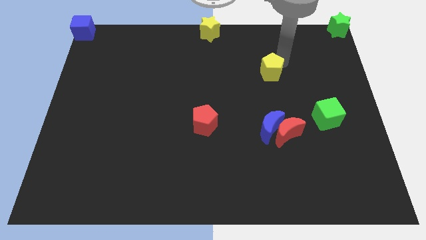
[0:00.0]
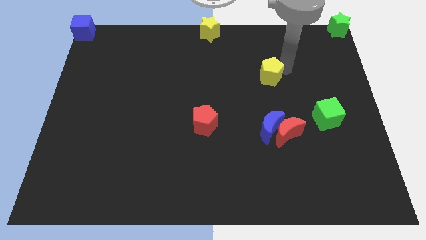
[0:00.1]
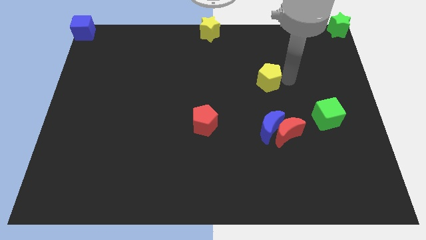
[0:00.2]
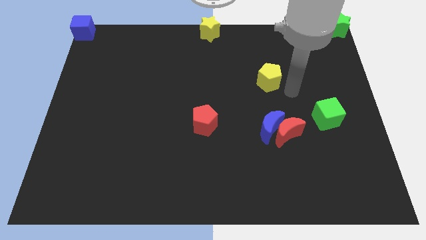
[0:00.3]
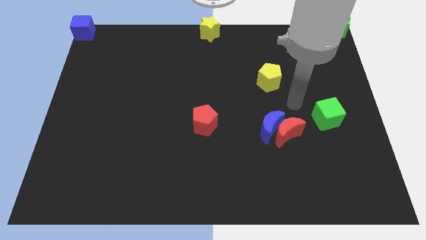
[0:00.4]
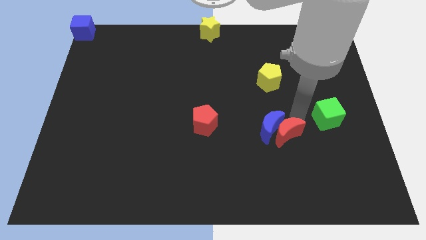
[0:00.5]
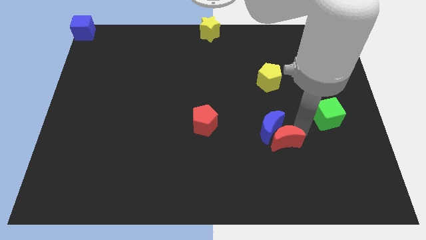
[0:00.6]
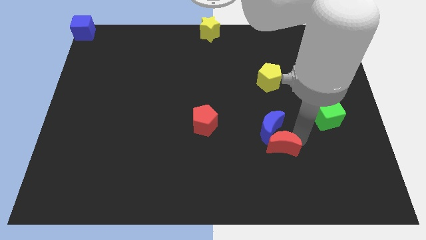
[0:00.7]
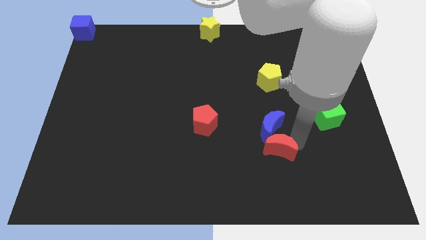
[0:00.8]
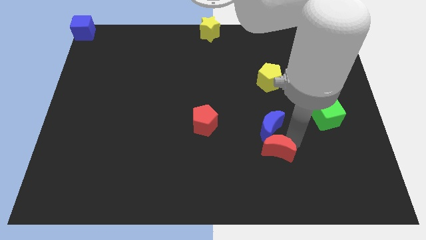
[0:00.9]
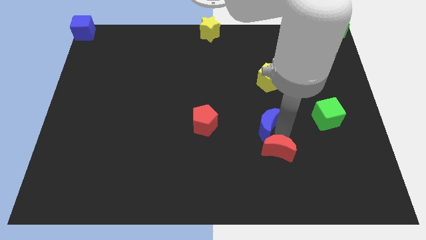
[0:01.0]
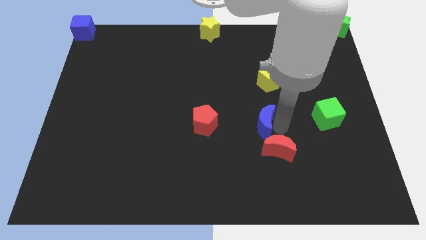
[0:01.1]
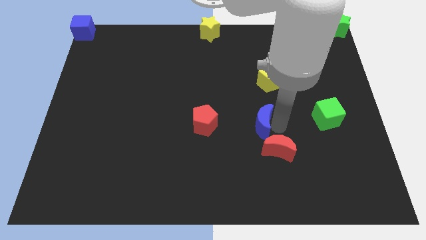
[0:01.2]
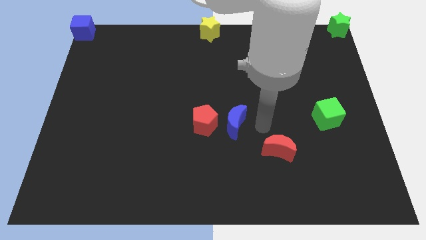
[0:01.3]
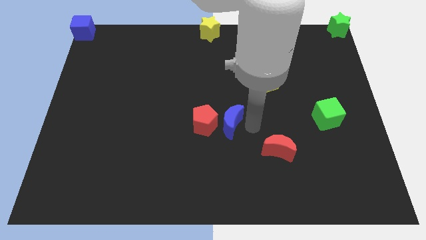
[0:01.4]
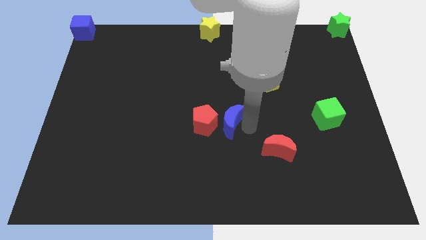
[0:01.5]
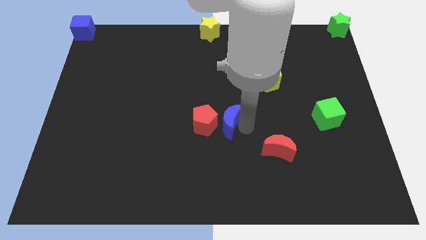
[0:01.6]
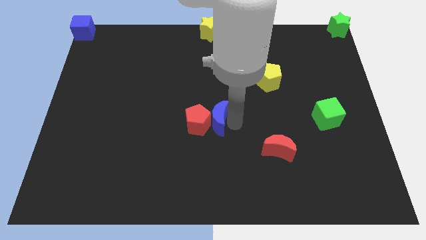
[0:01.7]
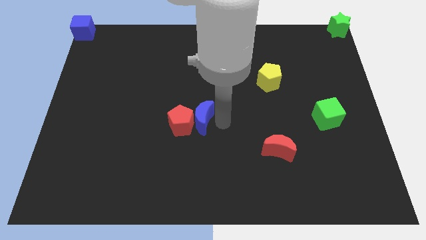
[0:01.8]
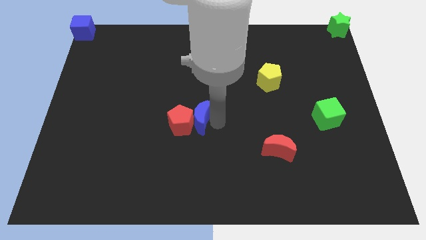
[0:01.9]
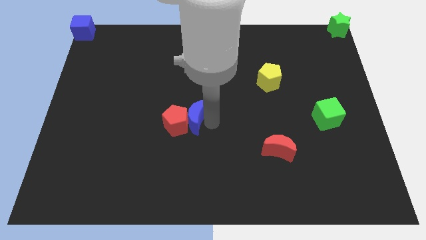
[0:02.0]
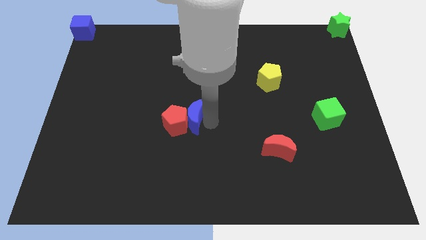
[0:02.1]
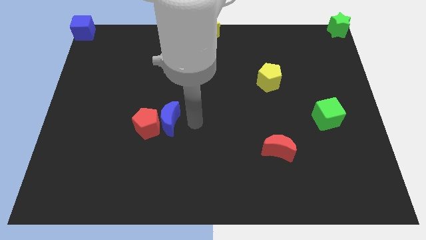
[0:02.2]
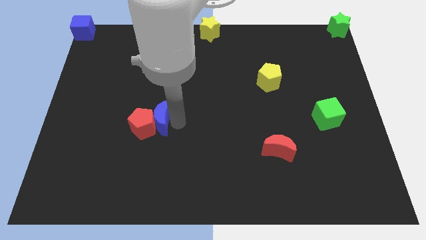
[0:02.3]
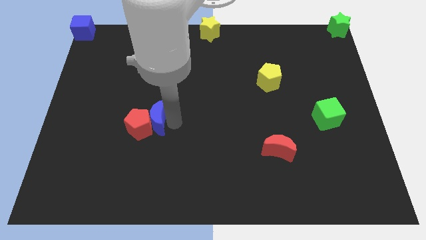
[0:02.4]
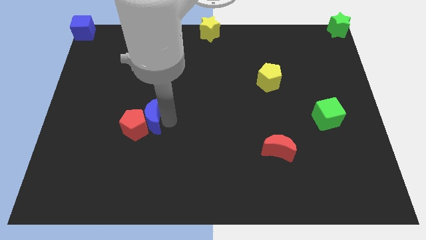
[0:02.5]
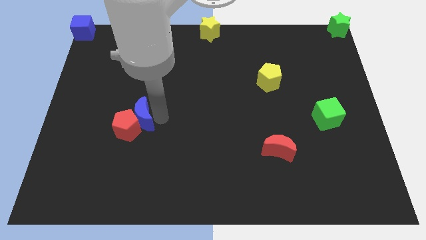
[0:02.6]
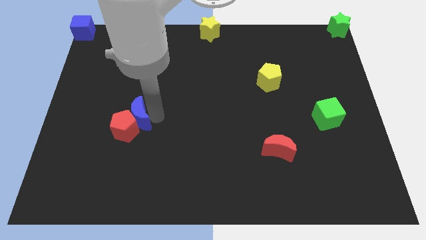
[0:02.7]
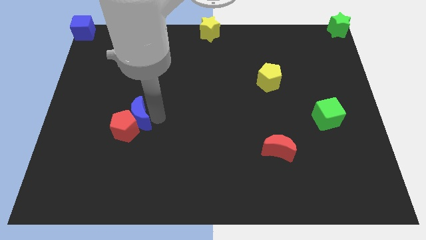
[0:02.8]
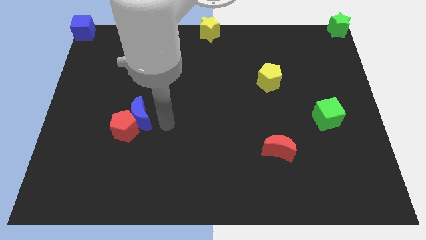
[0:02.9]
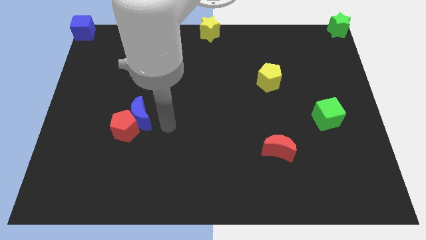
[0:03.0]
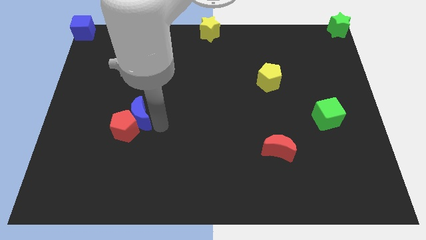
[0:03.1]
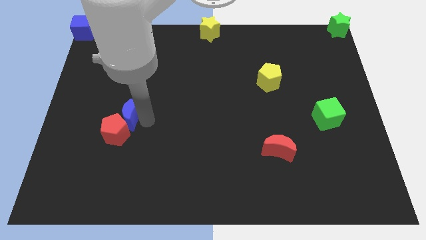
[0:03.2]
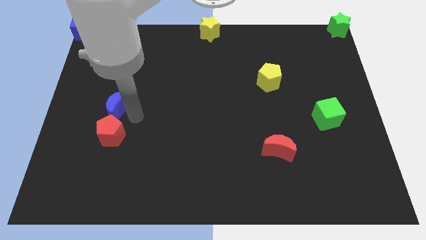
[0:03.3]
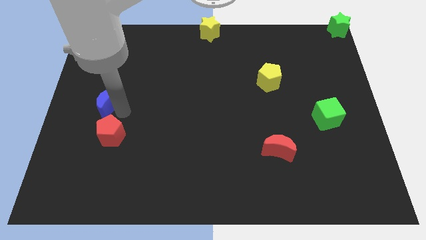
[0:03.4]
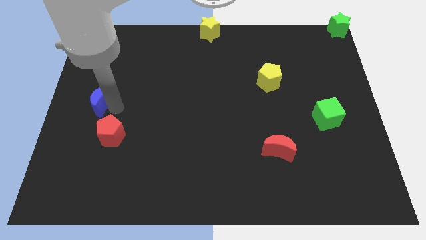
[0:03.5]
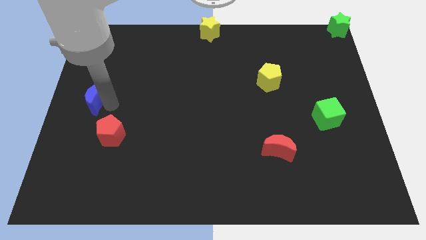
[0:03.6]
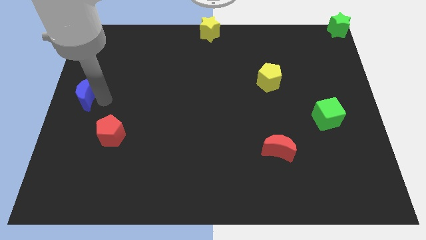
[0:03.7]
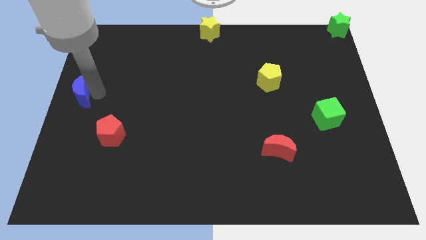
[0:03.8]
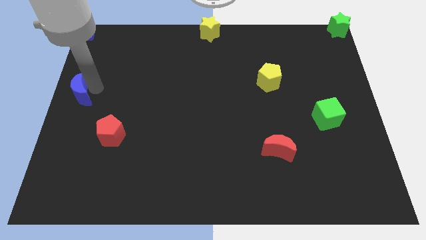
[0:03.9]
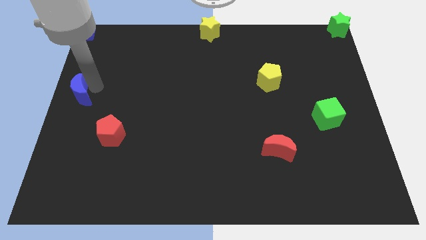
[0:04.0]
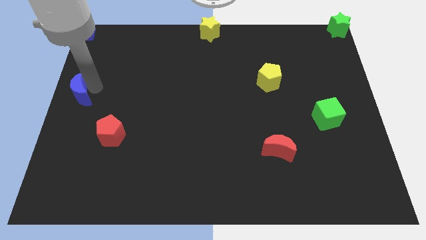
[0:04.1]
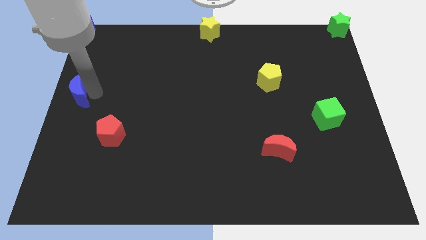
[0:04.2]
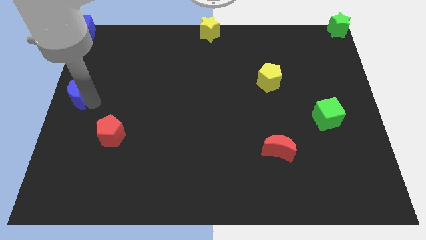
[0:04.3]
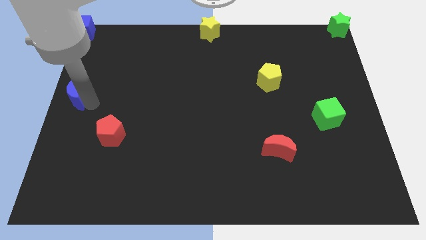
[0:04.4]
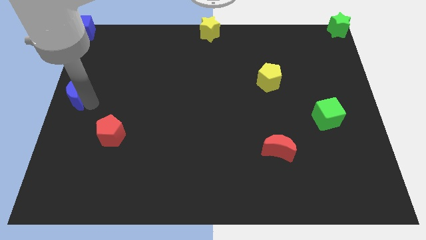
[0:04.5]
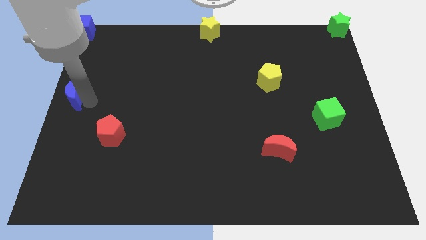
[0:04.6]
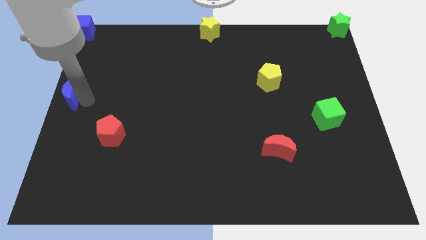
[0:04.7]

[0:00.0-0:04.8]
move blue moon to the left center of the board

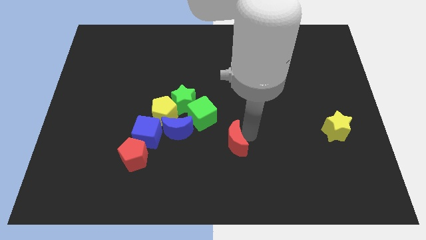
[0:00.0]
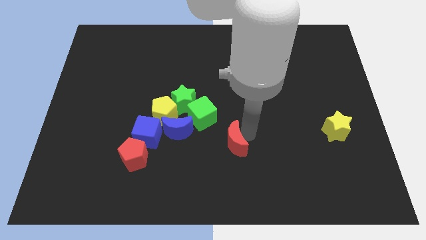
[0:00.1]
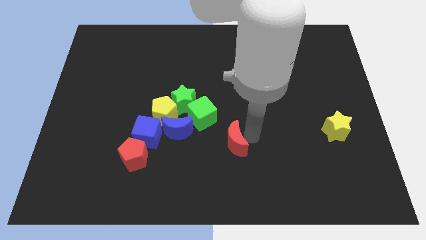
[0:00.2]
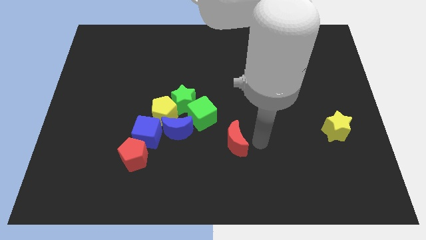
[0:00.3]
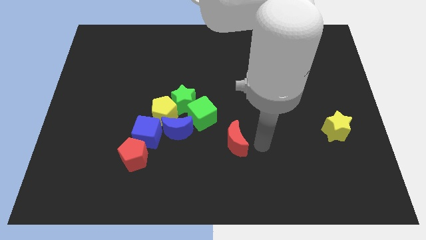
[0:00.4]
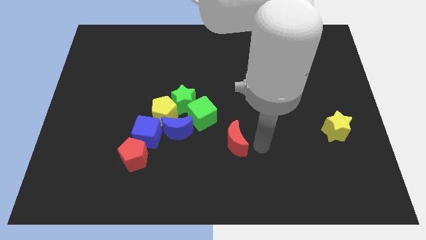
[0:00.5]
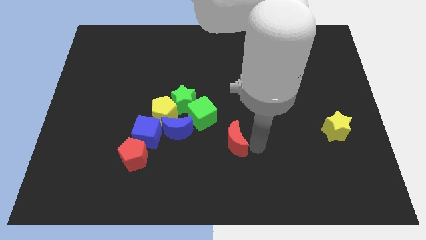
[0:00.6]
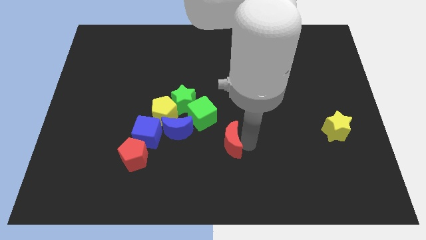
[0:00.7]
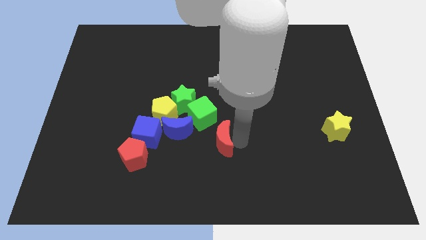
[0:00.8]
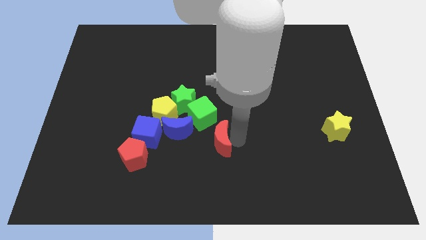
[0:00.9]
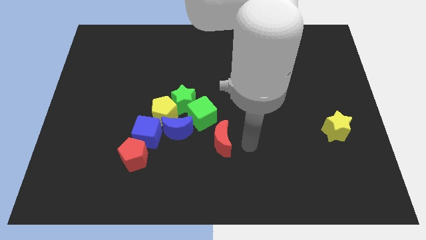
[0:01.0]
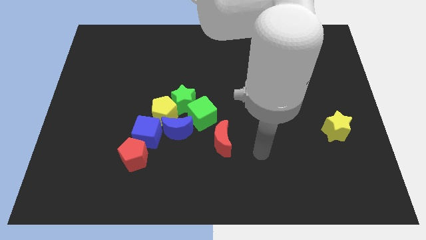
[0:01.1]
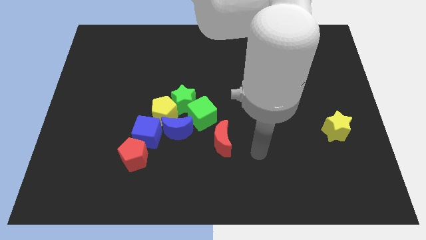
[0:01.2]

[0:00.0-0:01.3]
move the red moon to the left

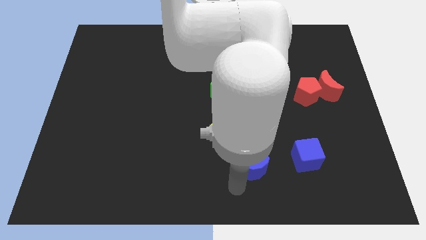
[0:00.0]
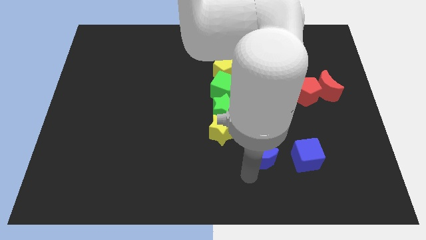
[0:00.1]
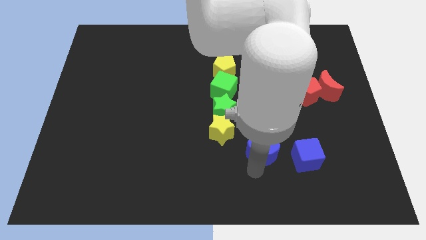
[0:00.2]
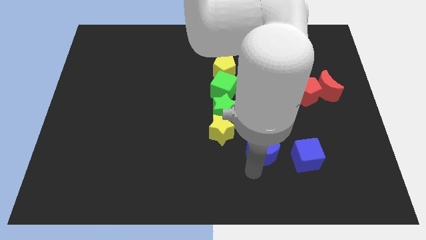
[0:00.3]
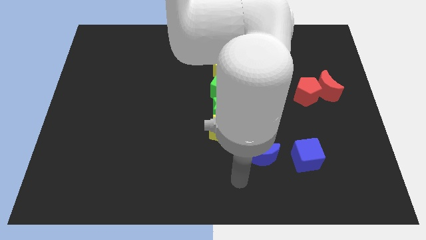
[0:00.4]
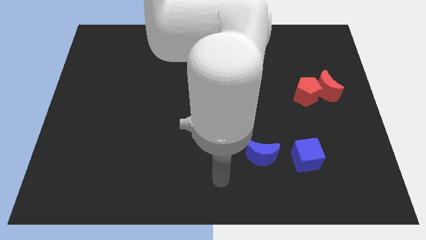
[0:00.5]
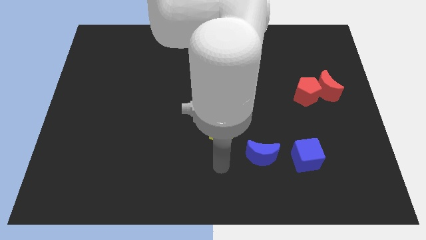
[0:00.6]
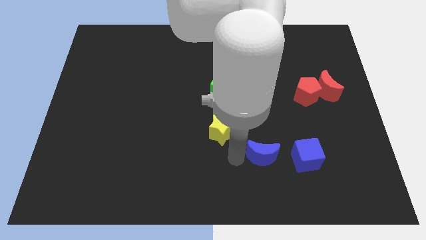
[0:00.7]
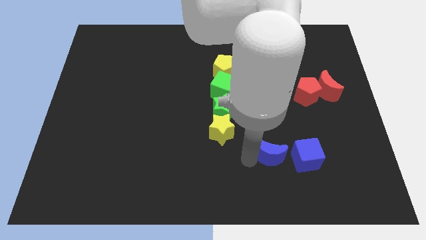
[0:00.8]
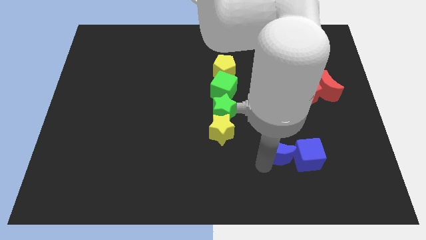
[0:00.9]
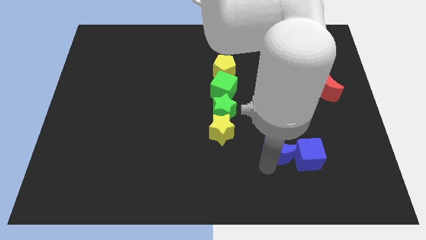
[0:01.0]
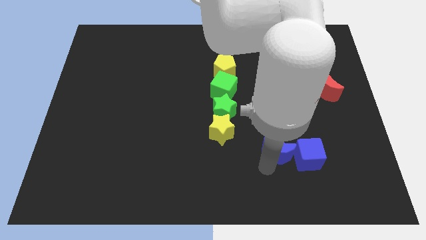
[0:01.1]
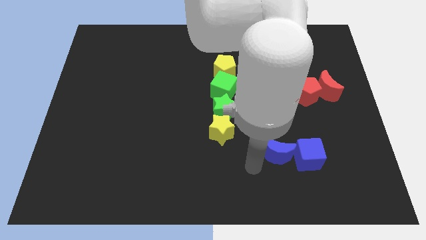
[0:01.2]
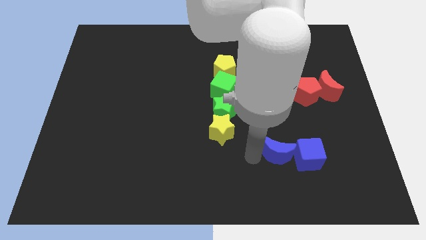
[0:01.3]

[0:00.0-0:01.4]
push the blue crescent towards the blue cube

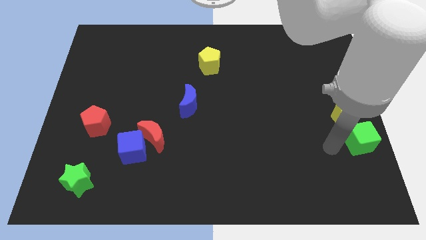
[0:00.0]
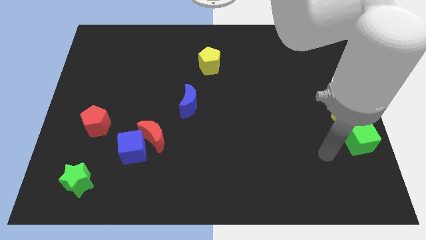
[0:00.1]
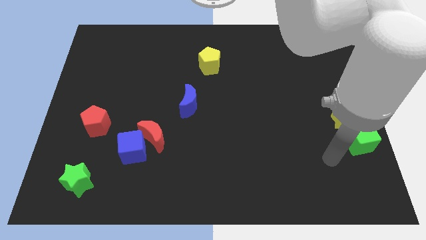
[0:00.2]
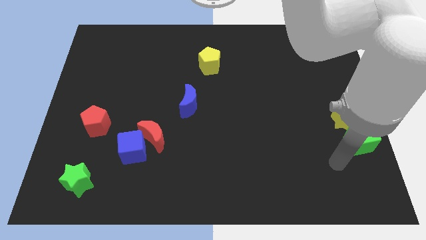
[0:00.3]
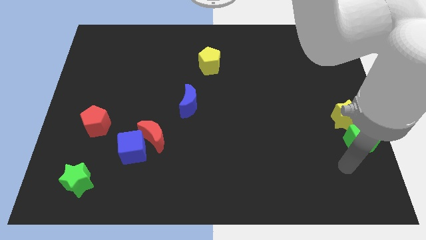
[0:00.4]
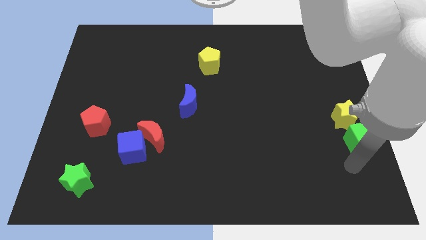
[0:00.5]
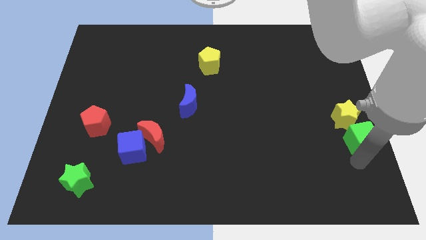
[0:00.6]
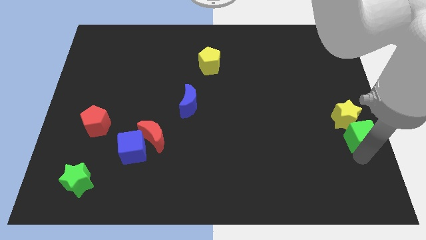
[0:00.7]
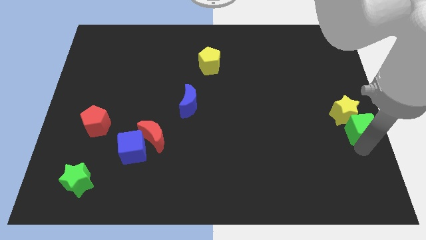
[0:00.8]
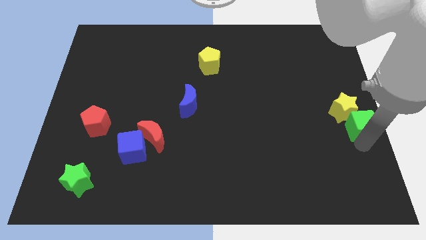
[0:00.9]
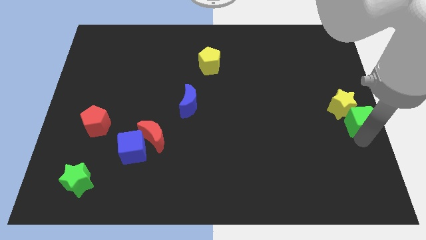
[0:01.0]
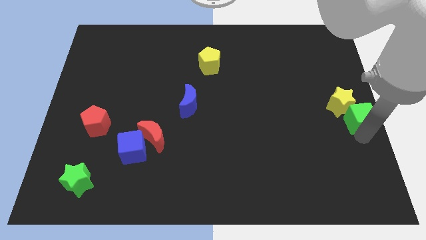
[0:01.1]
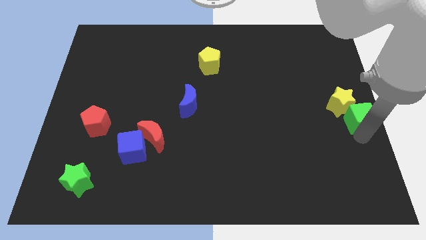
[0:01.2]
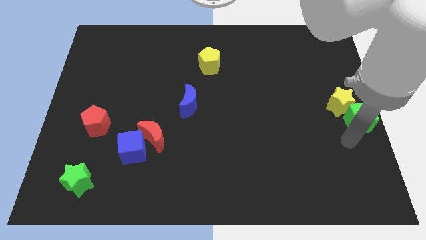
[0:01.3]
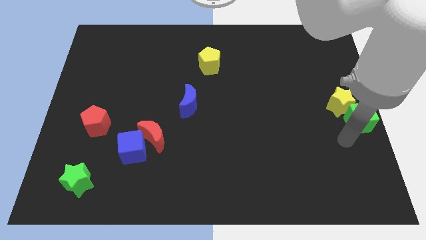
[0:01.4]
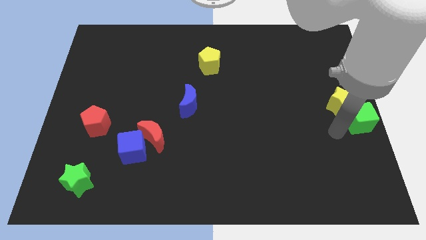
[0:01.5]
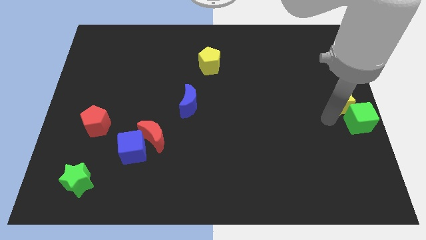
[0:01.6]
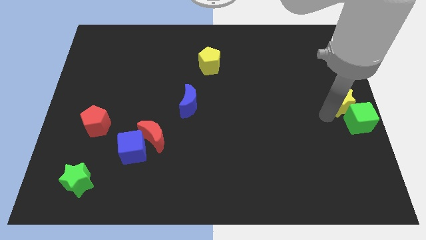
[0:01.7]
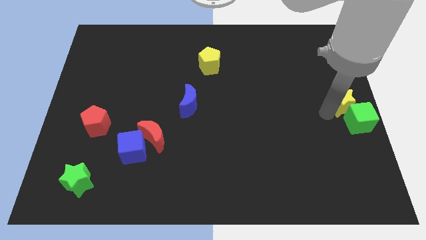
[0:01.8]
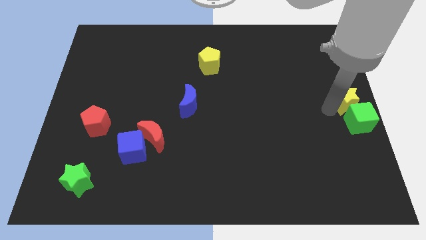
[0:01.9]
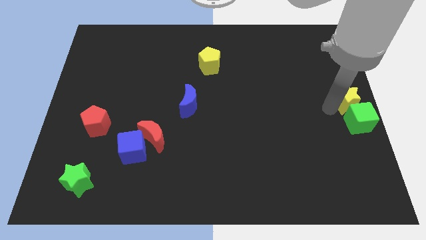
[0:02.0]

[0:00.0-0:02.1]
place the yellow star and green cube at the right center
